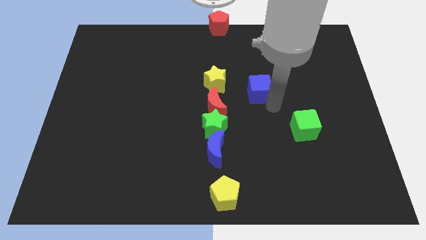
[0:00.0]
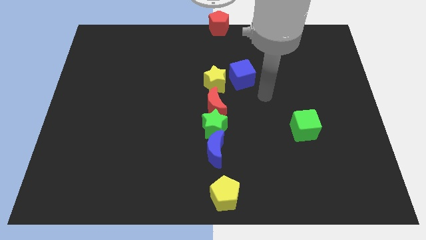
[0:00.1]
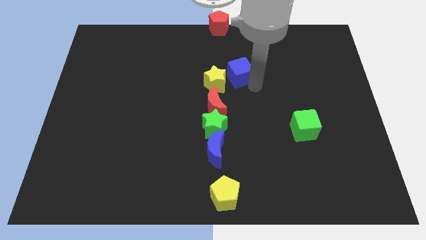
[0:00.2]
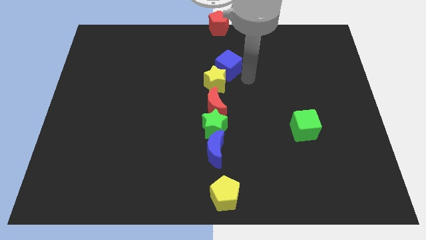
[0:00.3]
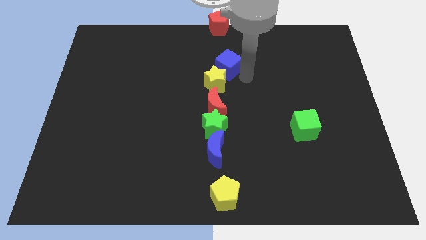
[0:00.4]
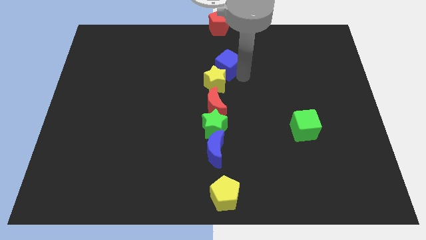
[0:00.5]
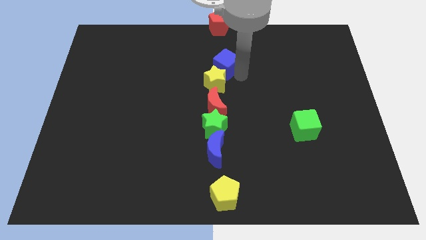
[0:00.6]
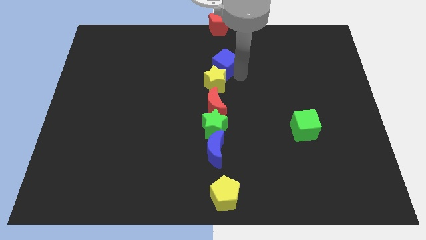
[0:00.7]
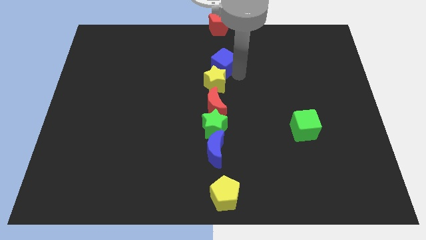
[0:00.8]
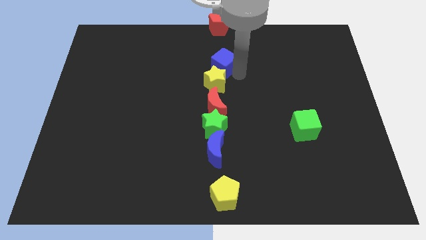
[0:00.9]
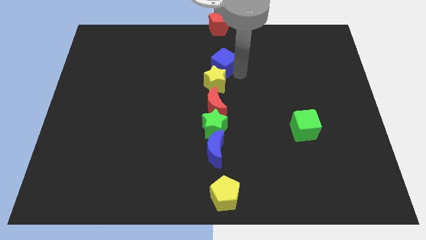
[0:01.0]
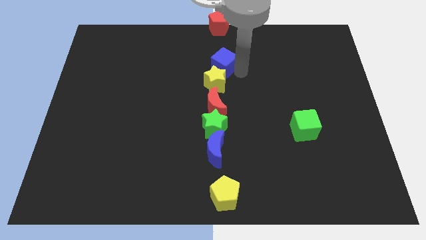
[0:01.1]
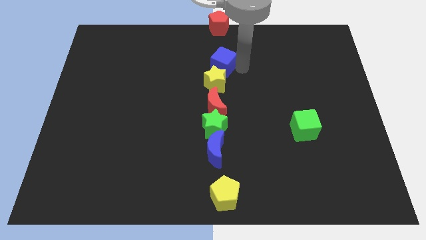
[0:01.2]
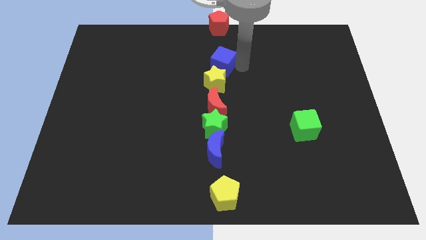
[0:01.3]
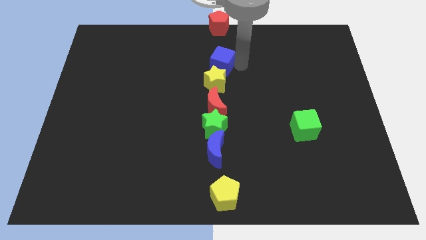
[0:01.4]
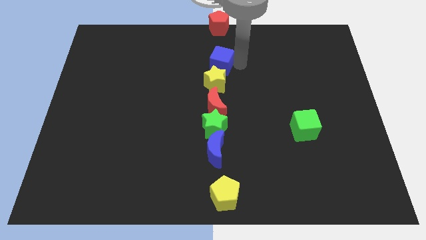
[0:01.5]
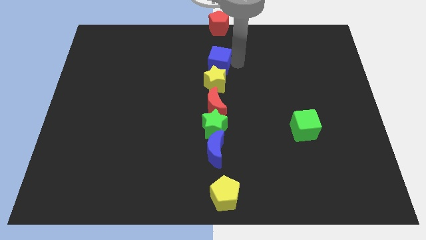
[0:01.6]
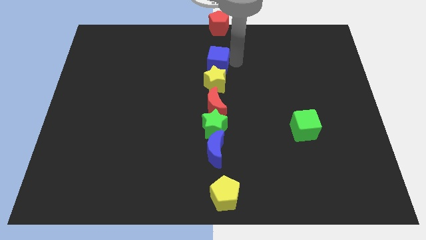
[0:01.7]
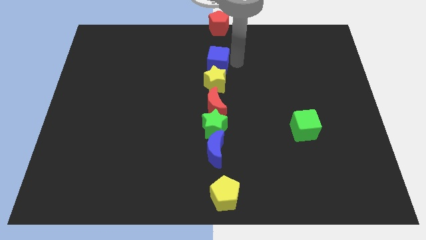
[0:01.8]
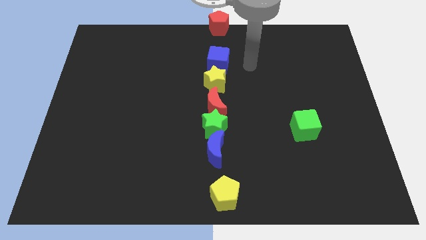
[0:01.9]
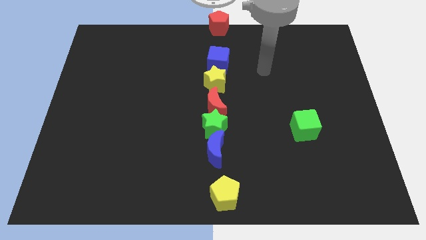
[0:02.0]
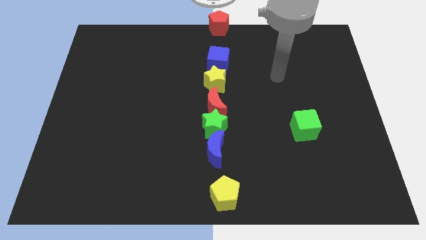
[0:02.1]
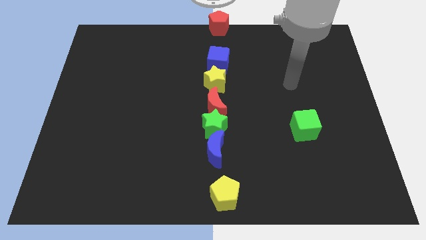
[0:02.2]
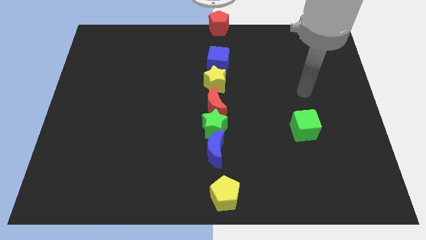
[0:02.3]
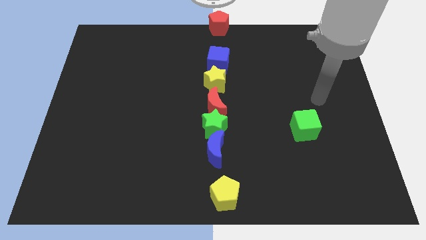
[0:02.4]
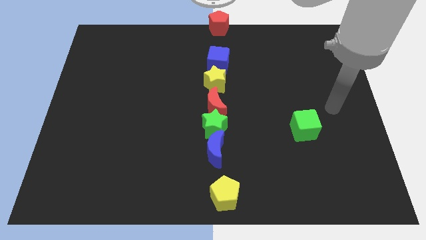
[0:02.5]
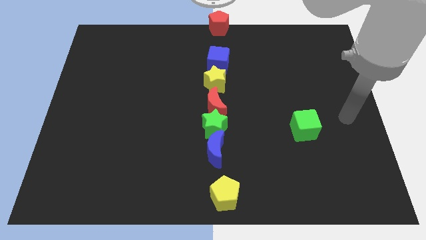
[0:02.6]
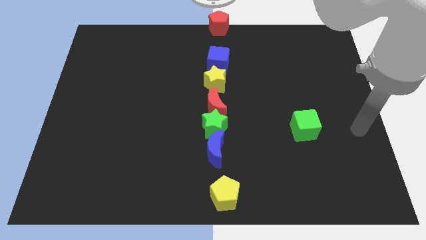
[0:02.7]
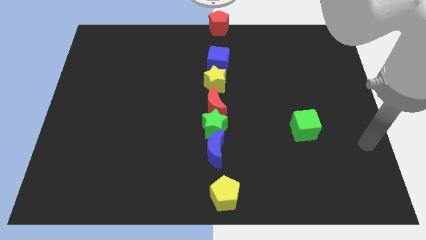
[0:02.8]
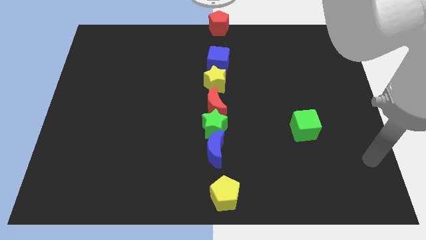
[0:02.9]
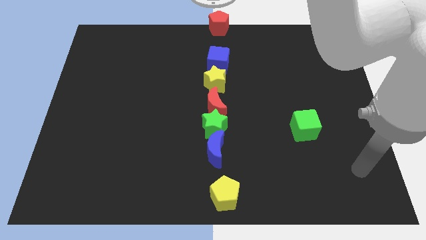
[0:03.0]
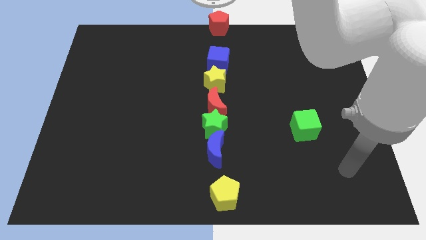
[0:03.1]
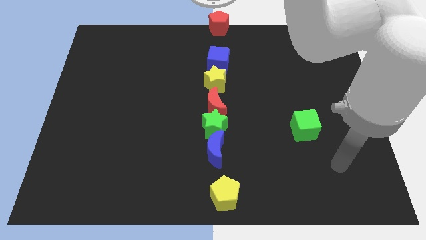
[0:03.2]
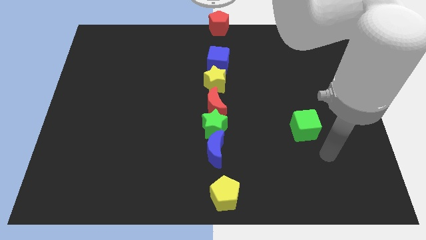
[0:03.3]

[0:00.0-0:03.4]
place the blue cube above the yellow star

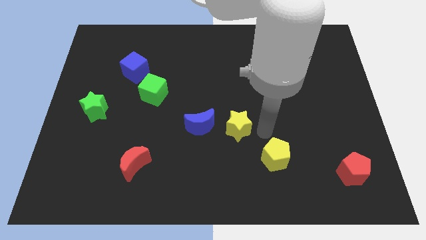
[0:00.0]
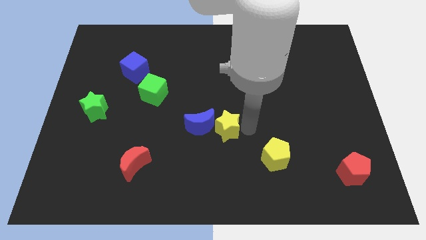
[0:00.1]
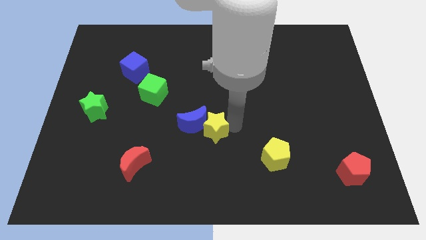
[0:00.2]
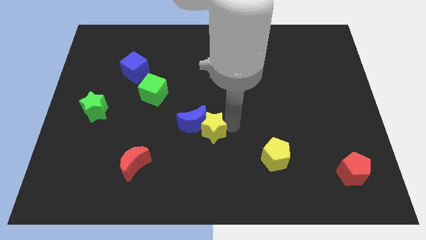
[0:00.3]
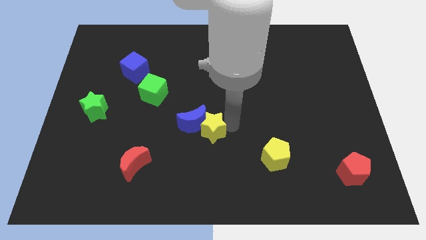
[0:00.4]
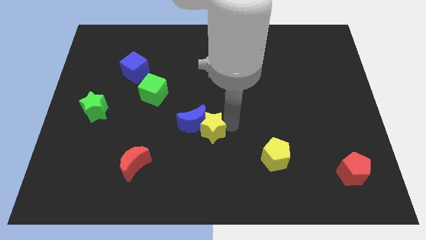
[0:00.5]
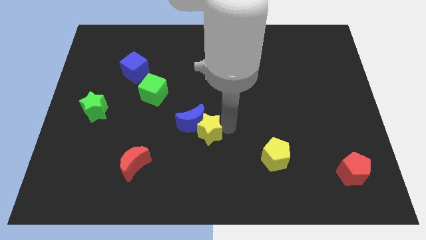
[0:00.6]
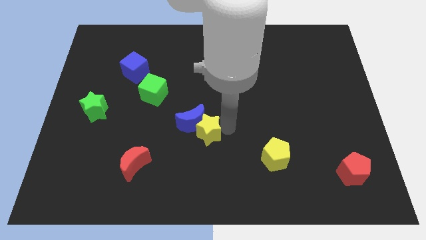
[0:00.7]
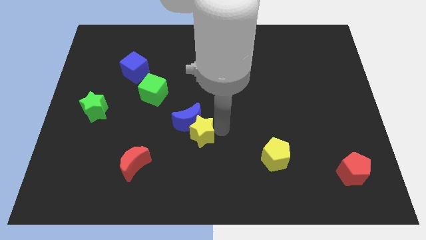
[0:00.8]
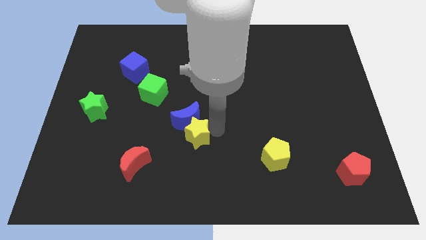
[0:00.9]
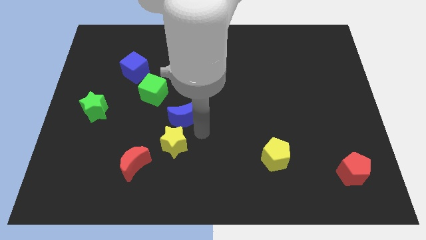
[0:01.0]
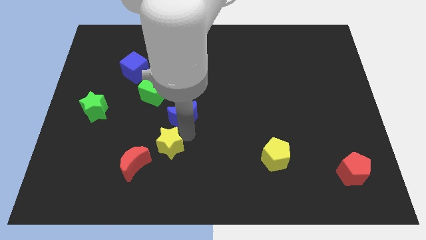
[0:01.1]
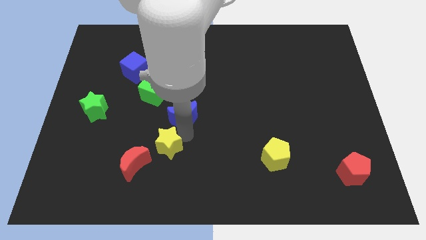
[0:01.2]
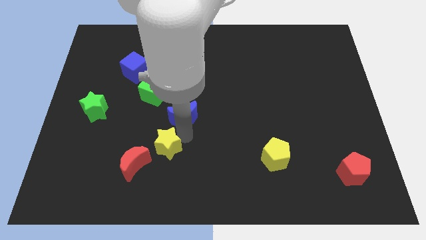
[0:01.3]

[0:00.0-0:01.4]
push the yellow star between red moon and blue moon

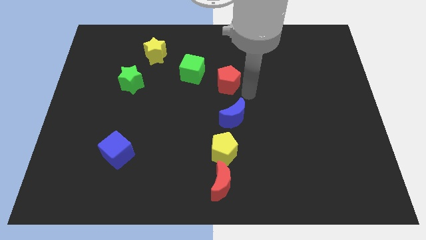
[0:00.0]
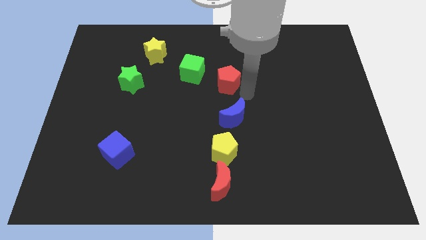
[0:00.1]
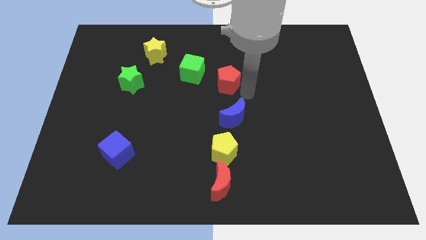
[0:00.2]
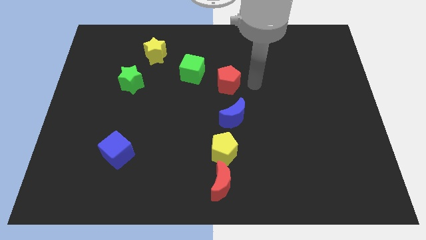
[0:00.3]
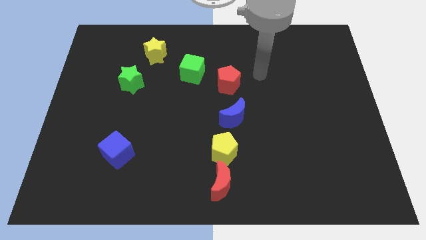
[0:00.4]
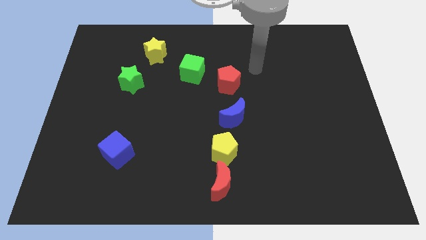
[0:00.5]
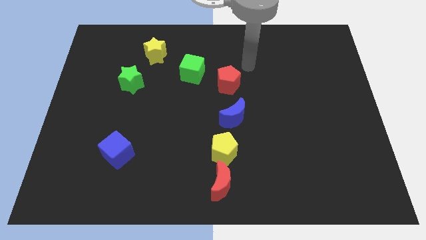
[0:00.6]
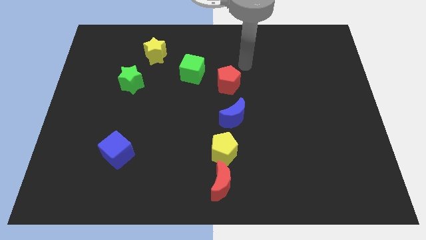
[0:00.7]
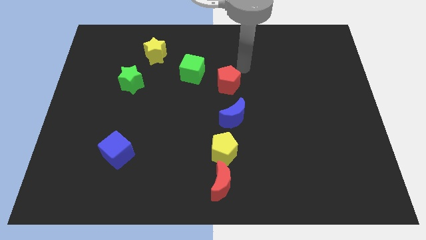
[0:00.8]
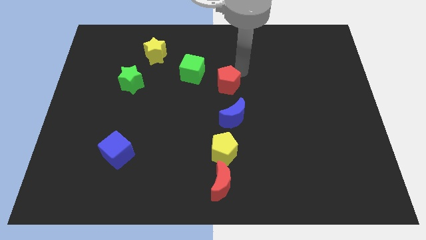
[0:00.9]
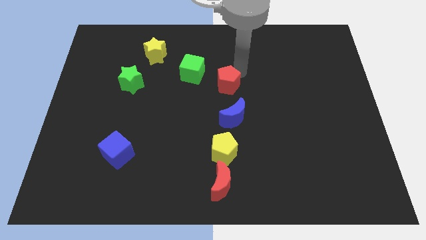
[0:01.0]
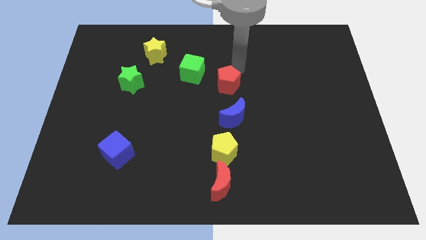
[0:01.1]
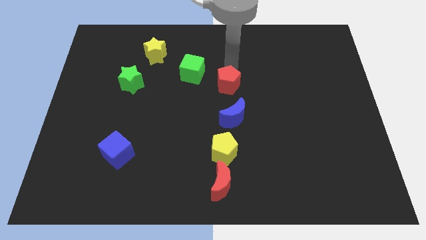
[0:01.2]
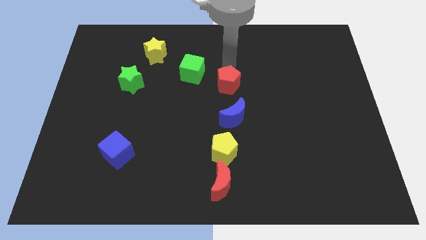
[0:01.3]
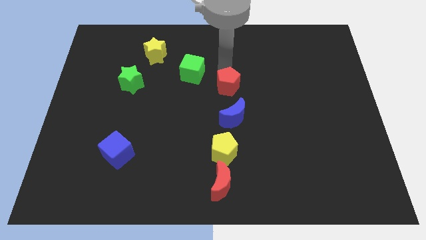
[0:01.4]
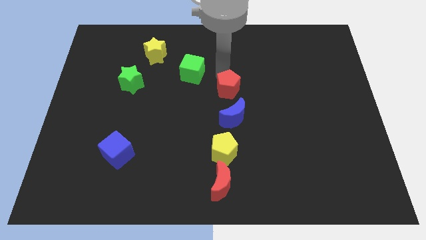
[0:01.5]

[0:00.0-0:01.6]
place the red pentagon above the blue moon

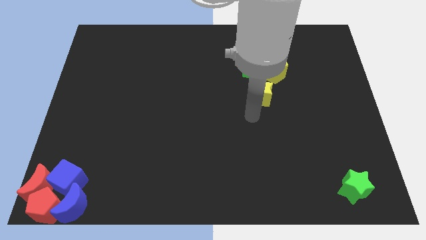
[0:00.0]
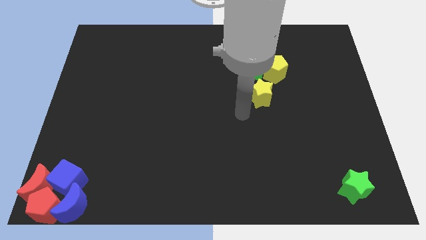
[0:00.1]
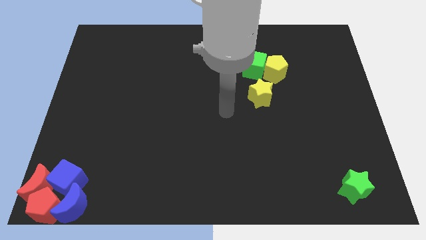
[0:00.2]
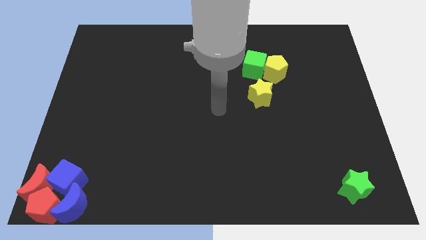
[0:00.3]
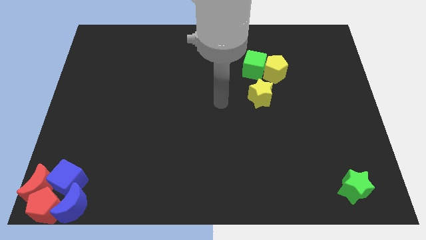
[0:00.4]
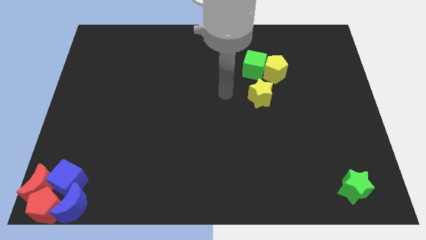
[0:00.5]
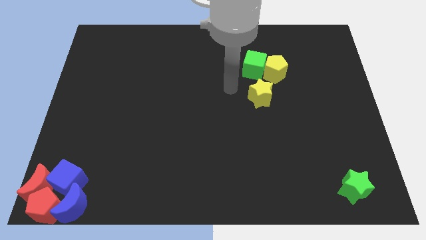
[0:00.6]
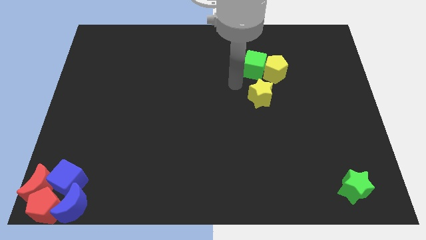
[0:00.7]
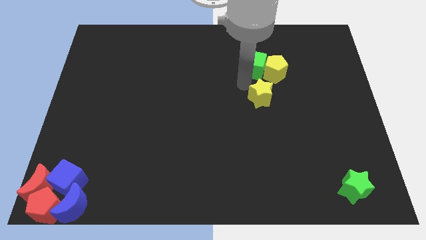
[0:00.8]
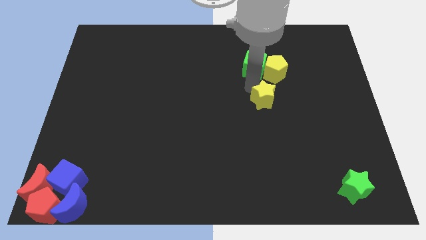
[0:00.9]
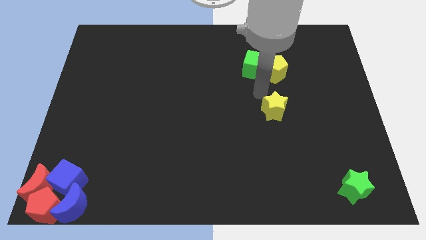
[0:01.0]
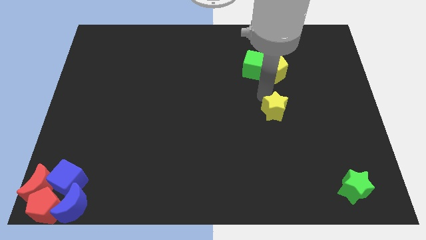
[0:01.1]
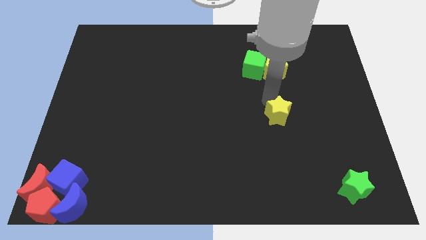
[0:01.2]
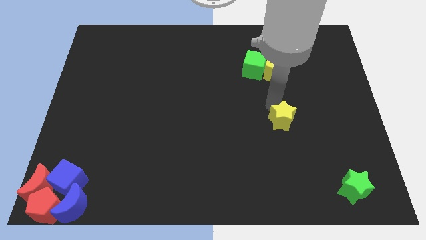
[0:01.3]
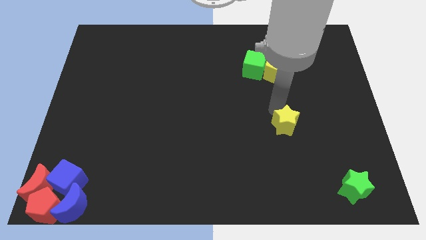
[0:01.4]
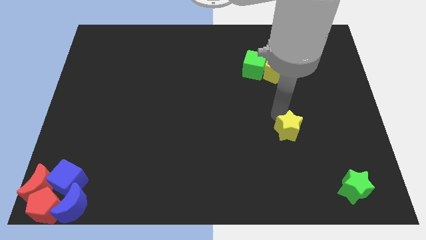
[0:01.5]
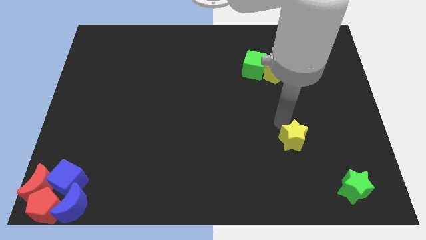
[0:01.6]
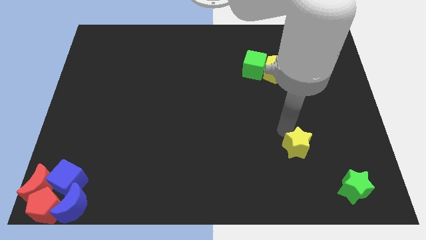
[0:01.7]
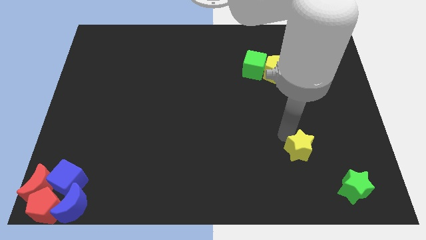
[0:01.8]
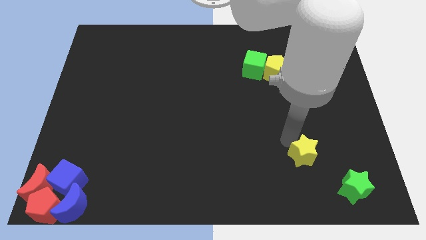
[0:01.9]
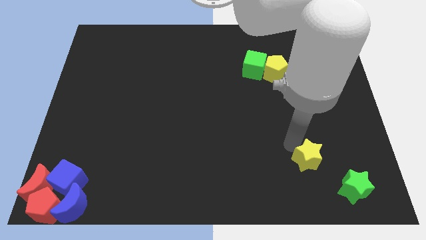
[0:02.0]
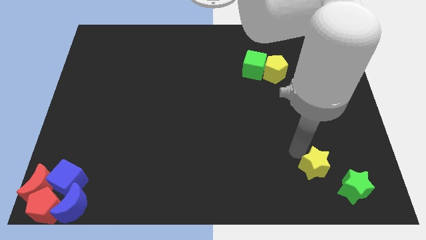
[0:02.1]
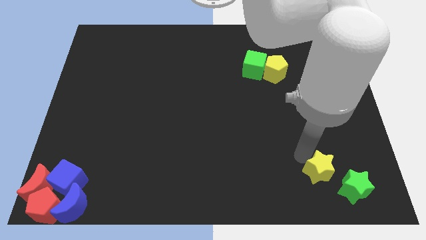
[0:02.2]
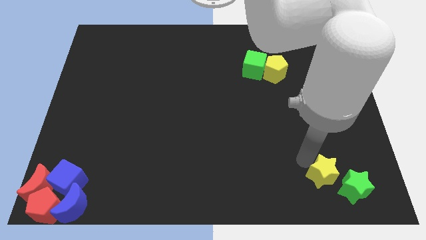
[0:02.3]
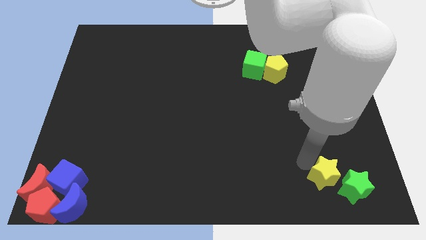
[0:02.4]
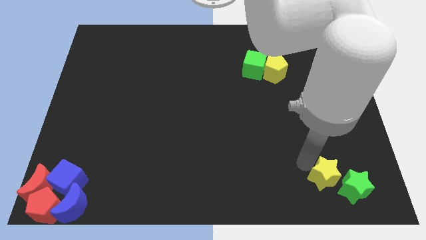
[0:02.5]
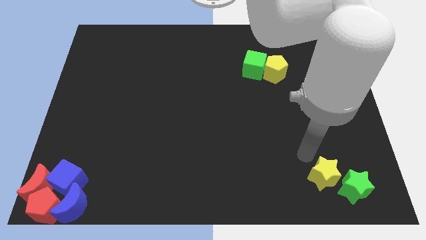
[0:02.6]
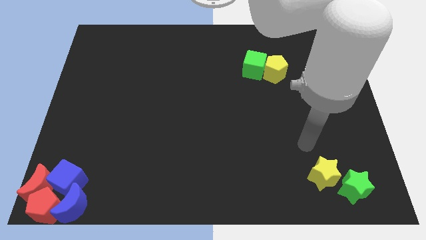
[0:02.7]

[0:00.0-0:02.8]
move the yellow star diagonally above the green star
